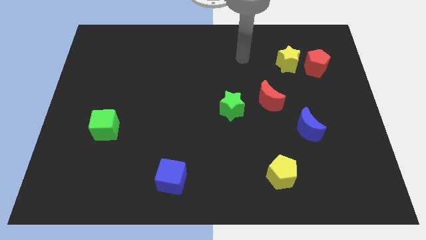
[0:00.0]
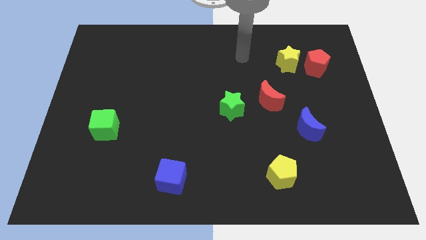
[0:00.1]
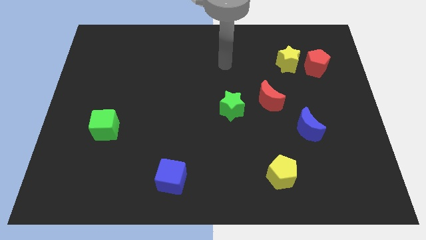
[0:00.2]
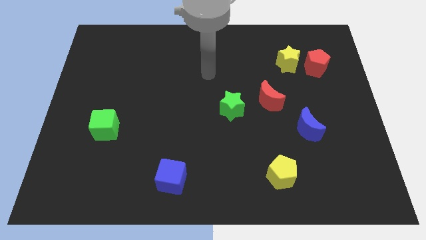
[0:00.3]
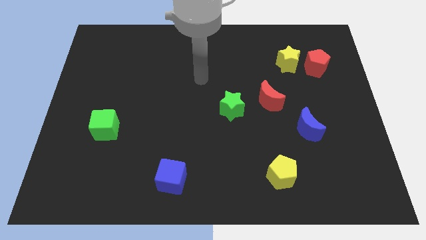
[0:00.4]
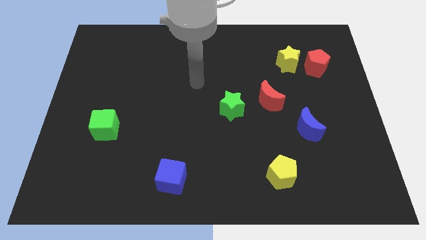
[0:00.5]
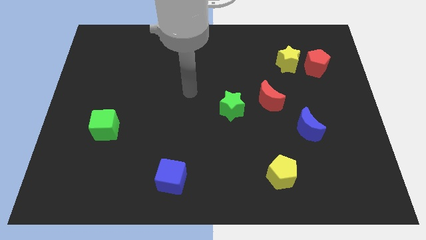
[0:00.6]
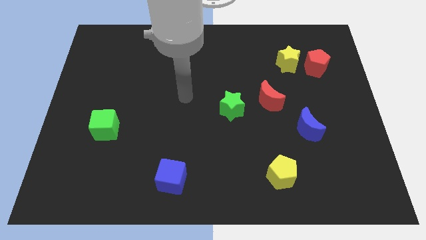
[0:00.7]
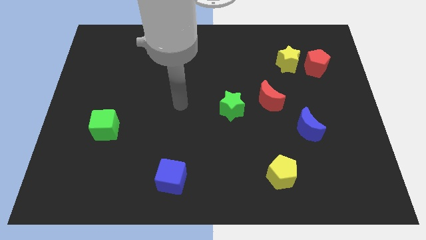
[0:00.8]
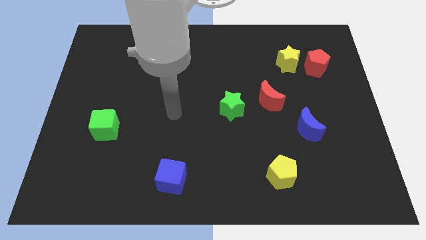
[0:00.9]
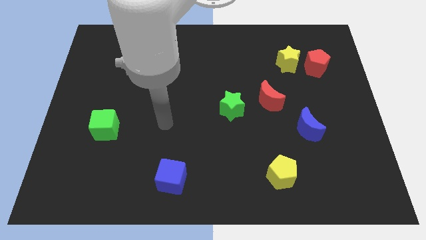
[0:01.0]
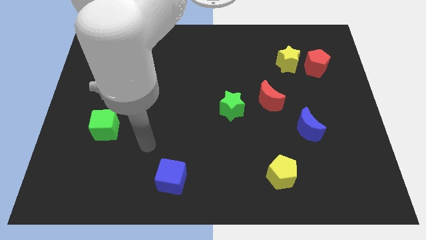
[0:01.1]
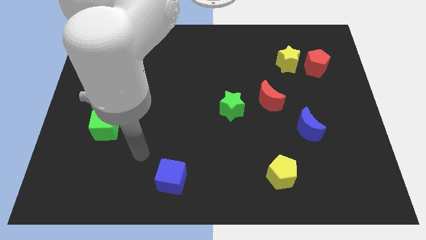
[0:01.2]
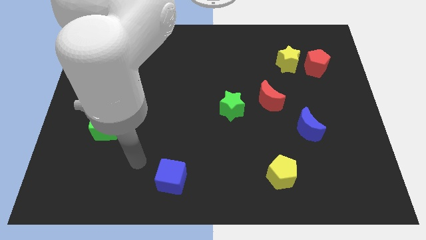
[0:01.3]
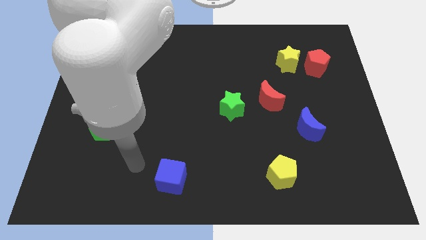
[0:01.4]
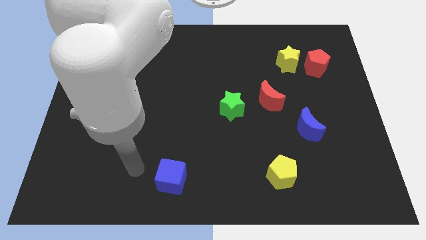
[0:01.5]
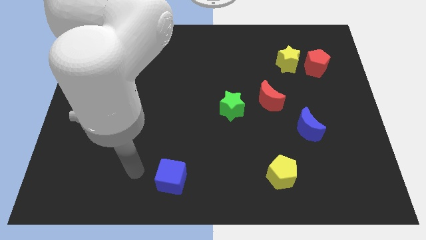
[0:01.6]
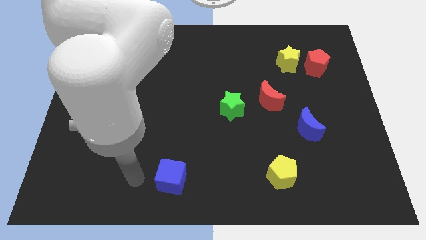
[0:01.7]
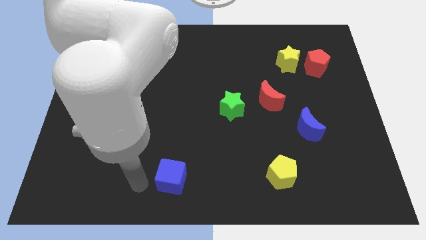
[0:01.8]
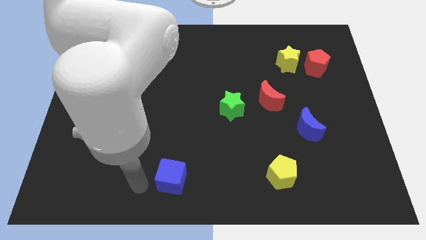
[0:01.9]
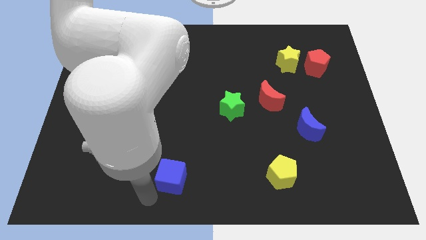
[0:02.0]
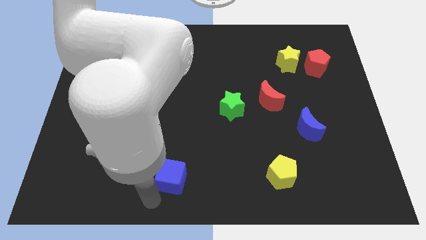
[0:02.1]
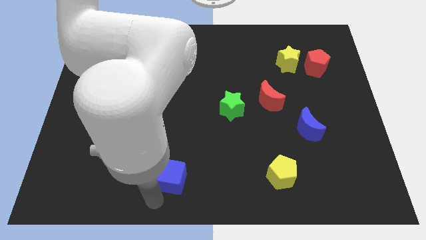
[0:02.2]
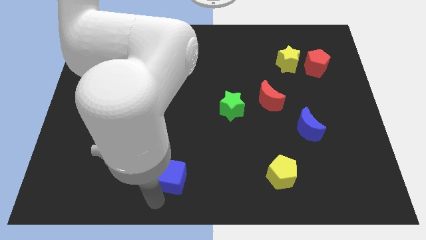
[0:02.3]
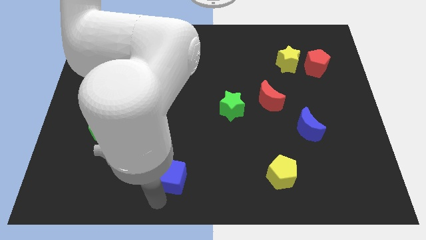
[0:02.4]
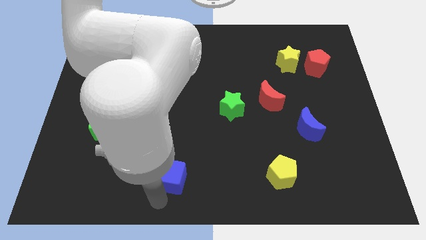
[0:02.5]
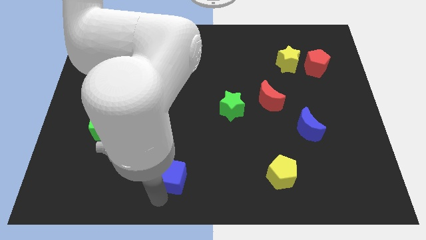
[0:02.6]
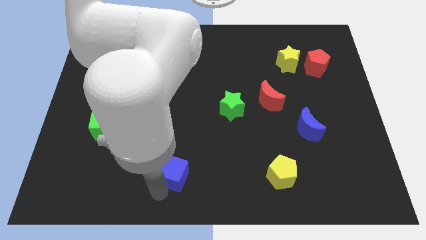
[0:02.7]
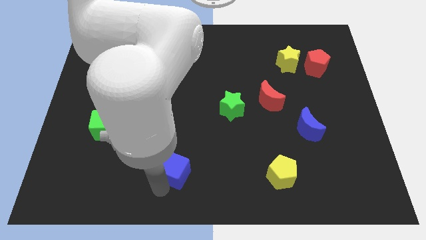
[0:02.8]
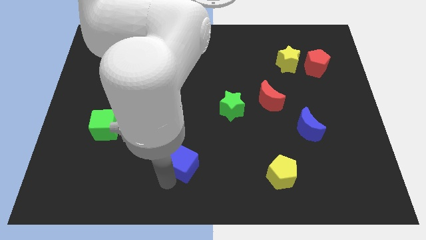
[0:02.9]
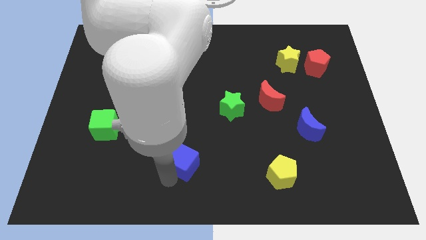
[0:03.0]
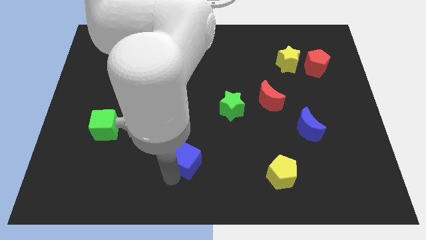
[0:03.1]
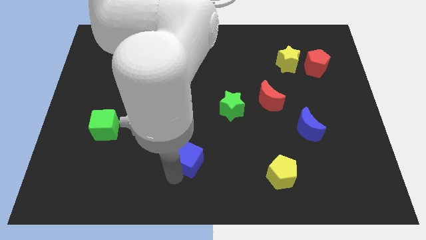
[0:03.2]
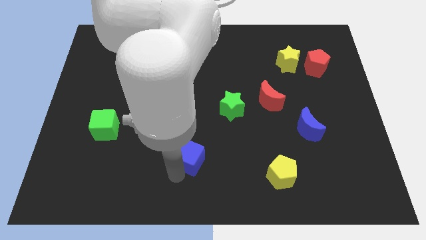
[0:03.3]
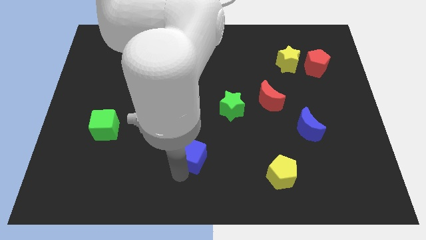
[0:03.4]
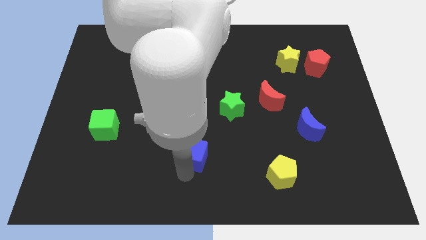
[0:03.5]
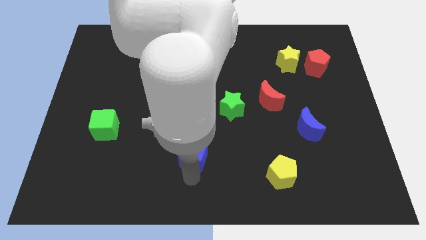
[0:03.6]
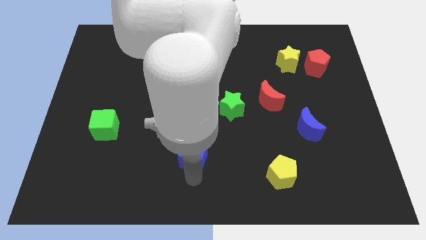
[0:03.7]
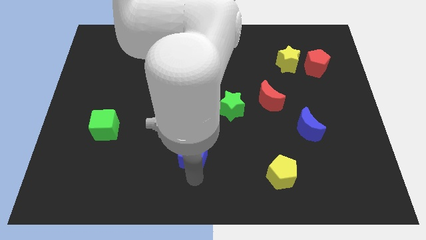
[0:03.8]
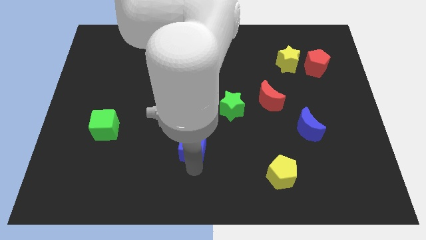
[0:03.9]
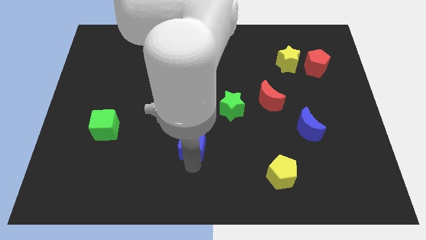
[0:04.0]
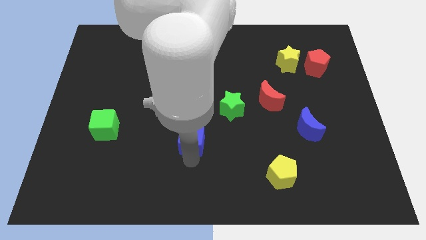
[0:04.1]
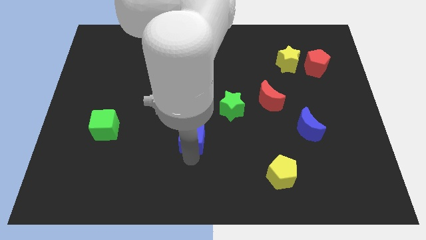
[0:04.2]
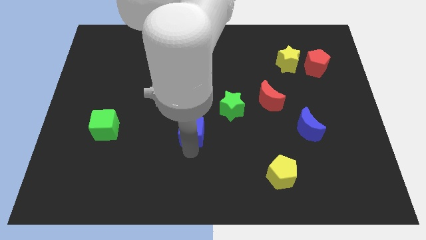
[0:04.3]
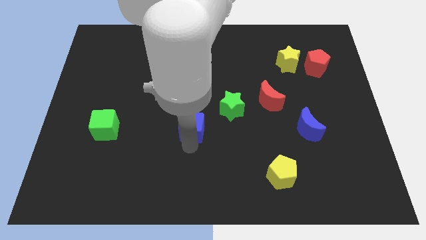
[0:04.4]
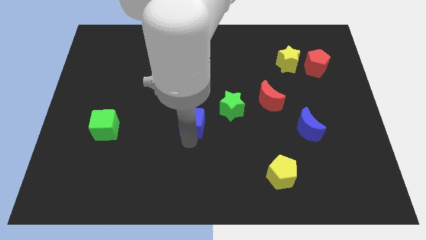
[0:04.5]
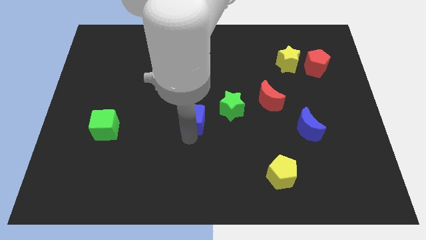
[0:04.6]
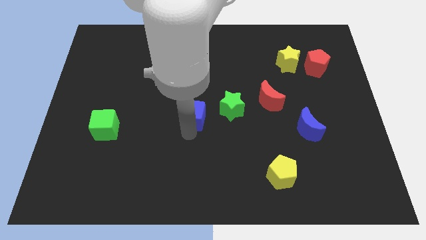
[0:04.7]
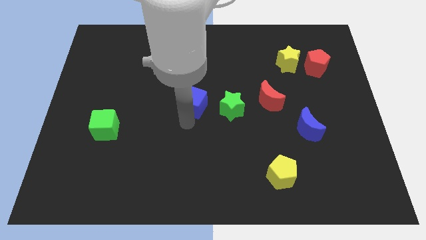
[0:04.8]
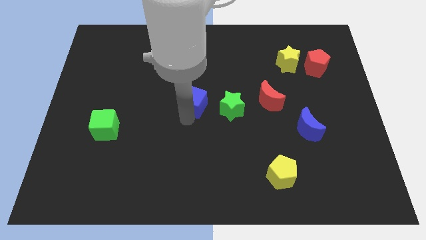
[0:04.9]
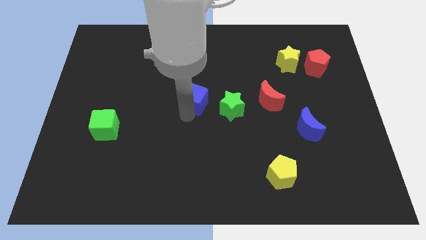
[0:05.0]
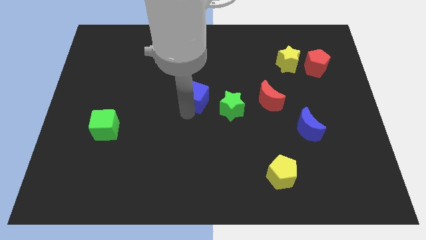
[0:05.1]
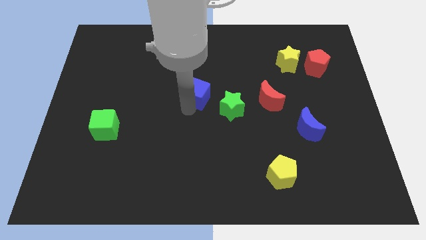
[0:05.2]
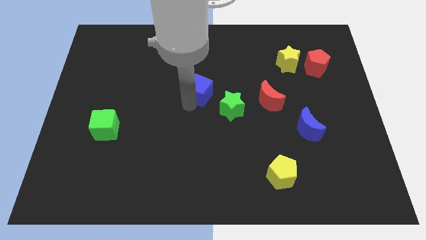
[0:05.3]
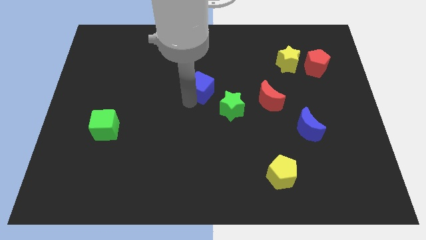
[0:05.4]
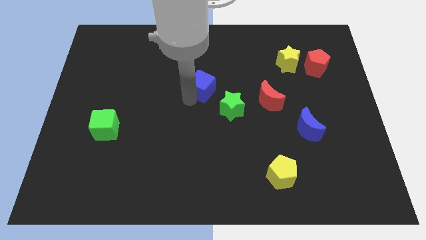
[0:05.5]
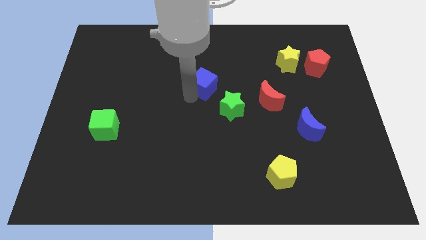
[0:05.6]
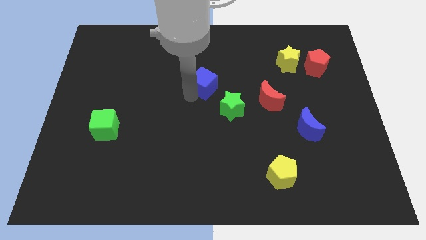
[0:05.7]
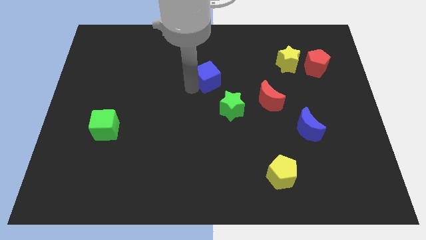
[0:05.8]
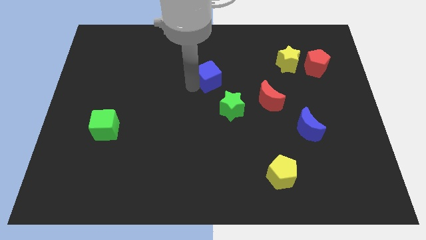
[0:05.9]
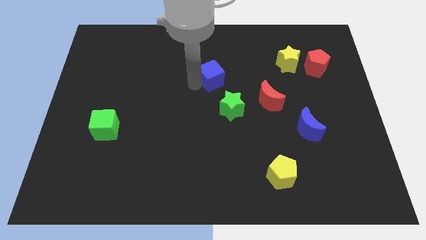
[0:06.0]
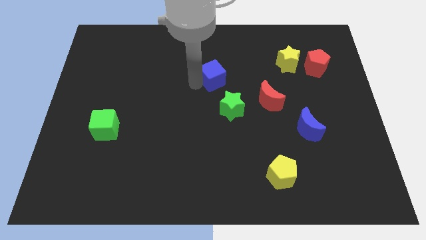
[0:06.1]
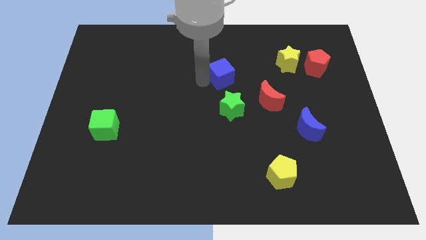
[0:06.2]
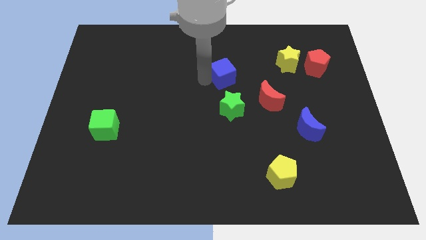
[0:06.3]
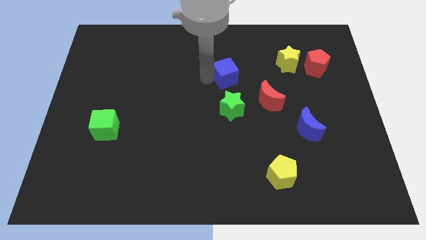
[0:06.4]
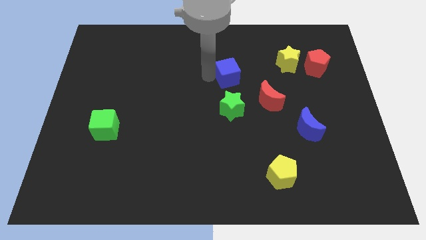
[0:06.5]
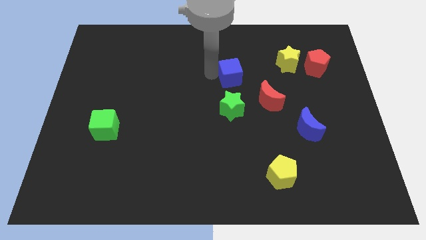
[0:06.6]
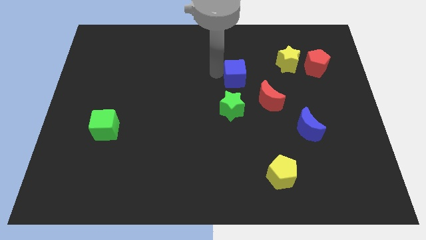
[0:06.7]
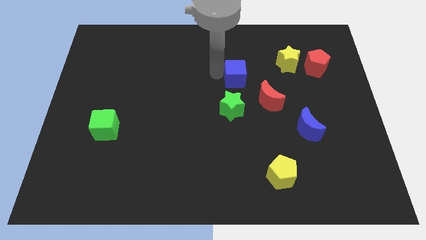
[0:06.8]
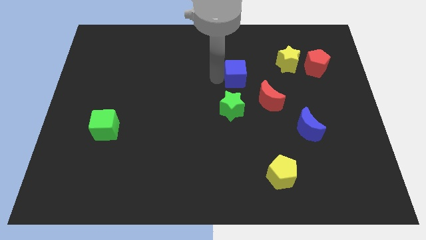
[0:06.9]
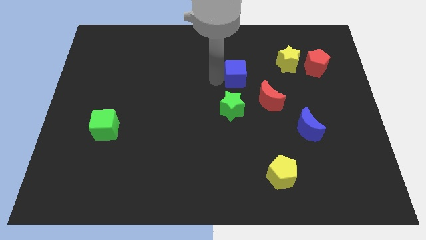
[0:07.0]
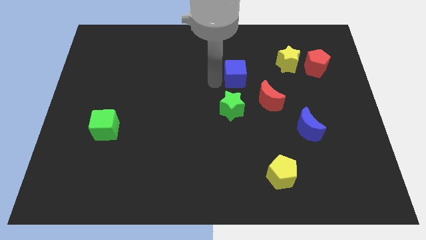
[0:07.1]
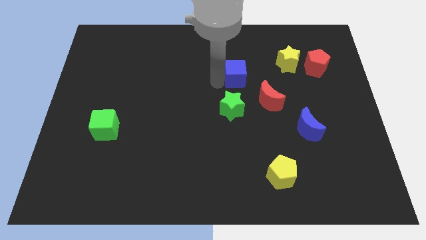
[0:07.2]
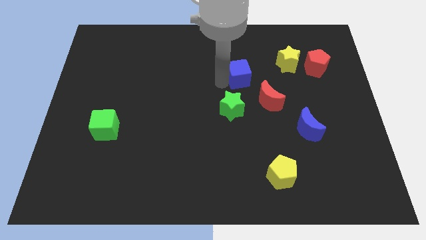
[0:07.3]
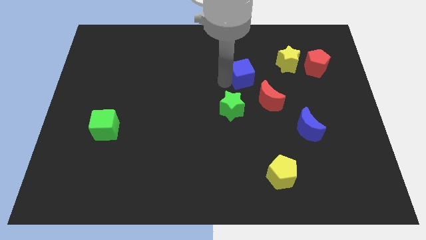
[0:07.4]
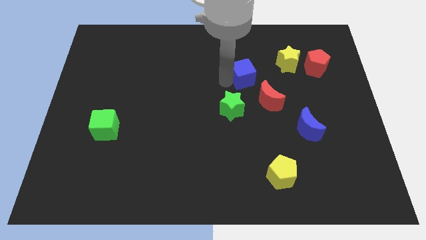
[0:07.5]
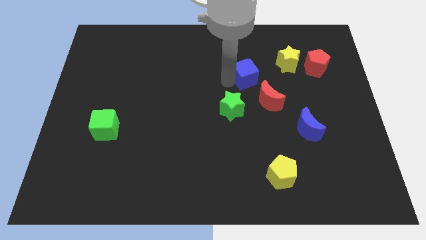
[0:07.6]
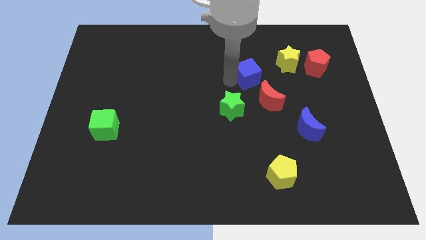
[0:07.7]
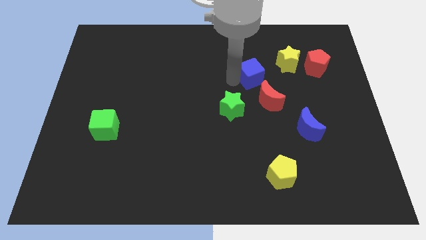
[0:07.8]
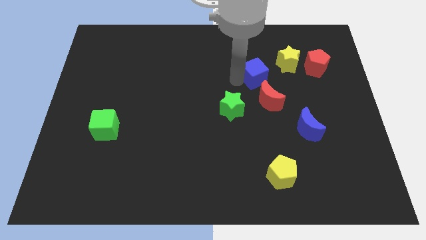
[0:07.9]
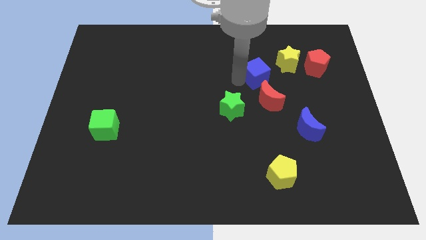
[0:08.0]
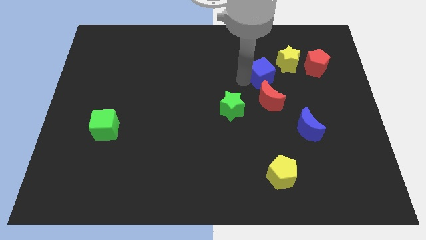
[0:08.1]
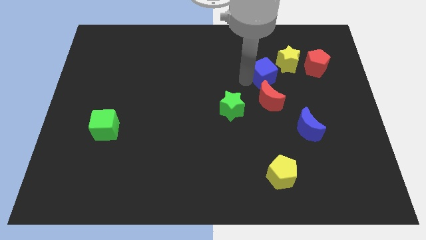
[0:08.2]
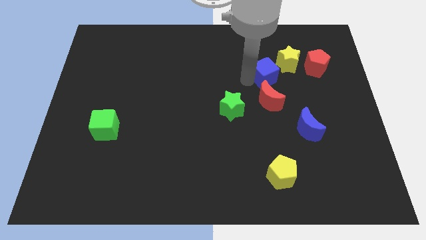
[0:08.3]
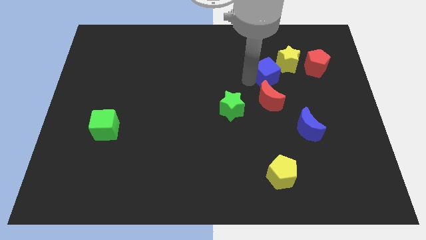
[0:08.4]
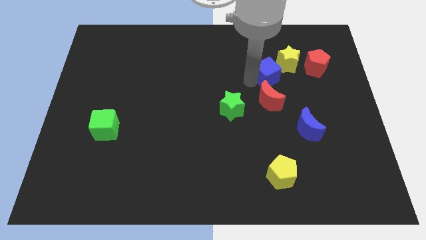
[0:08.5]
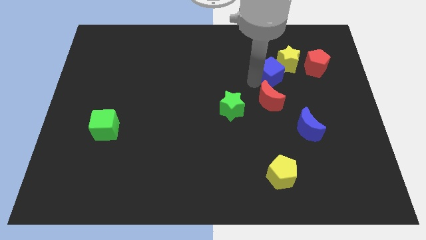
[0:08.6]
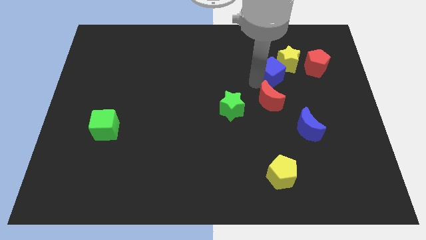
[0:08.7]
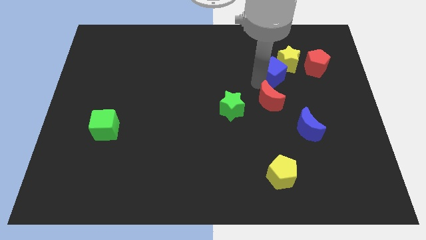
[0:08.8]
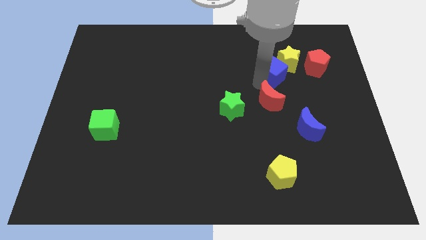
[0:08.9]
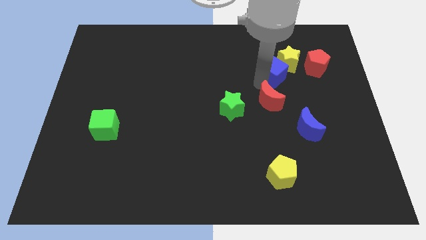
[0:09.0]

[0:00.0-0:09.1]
slide the blue cube to the yellow star
